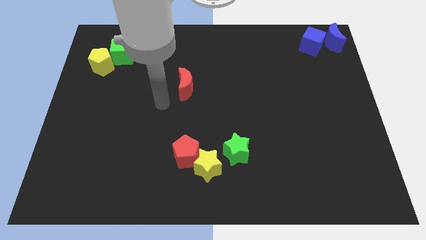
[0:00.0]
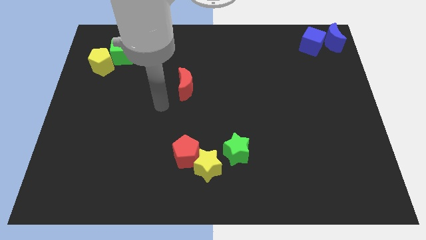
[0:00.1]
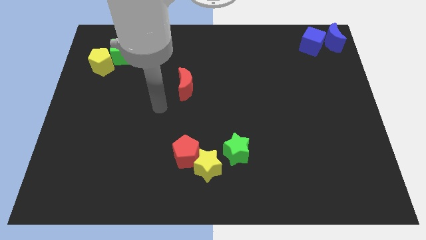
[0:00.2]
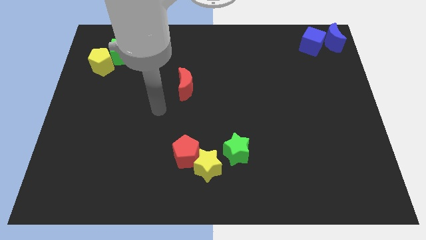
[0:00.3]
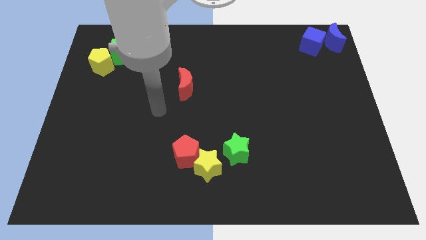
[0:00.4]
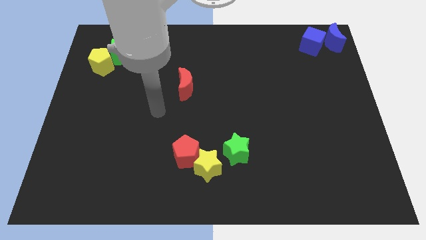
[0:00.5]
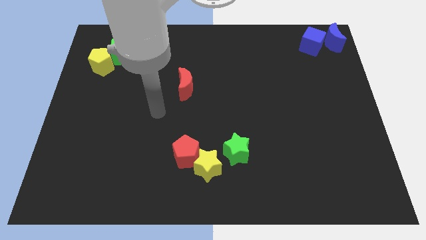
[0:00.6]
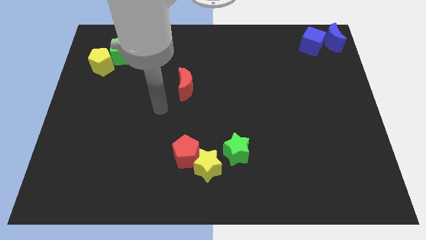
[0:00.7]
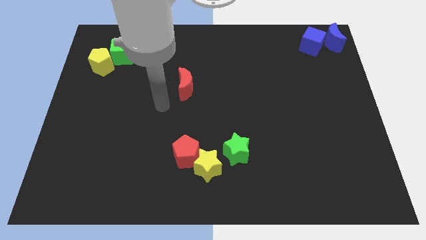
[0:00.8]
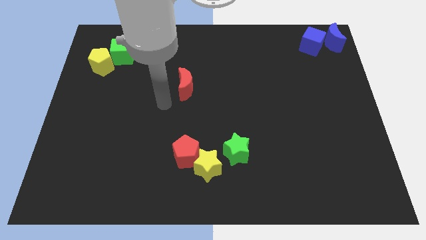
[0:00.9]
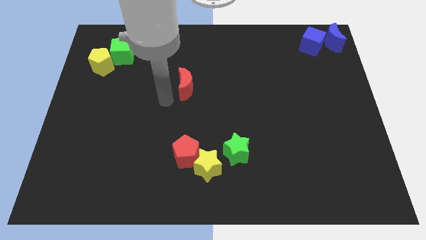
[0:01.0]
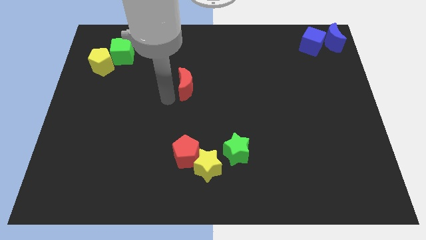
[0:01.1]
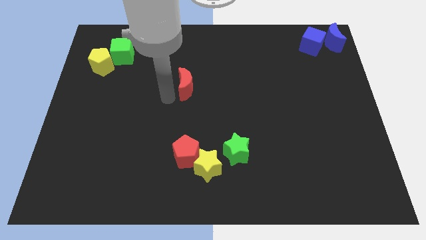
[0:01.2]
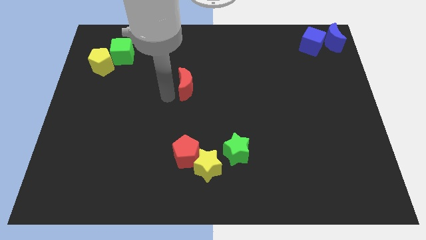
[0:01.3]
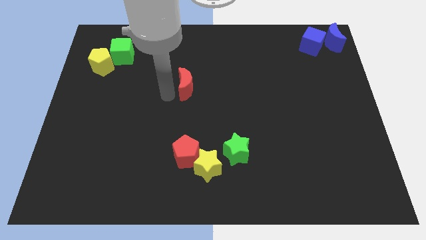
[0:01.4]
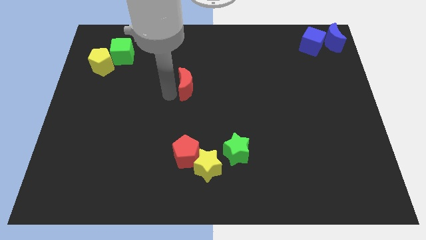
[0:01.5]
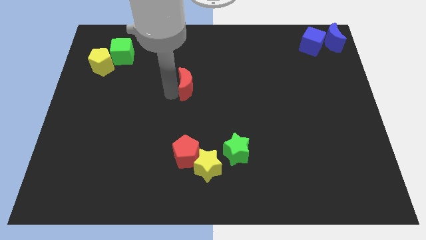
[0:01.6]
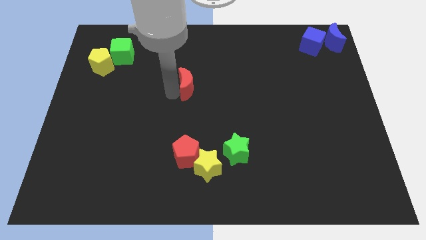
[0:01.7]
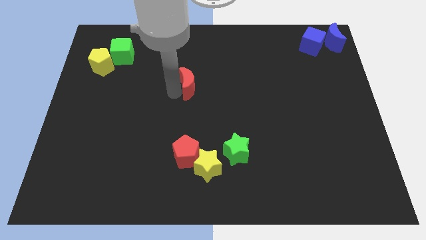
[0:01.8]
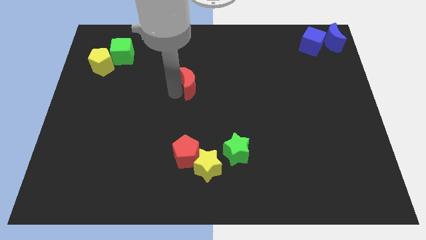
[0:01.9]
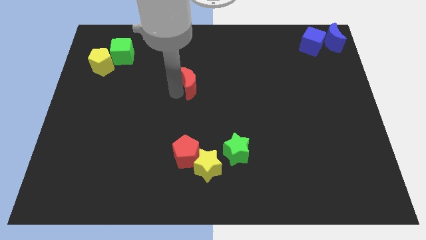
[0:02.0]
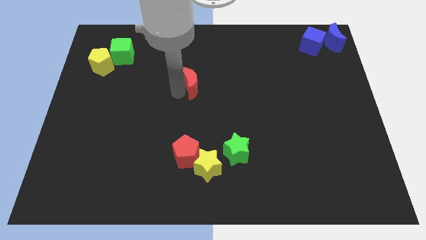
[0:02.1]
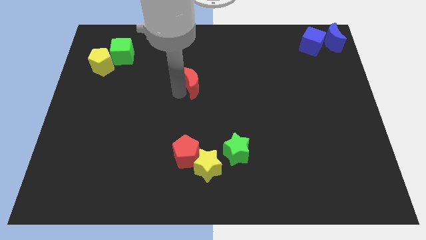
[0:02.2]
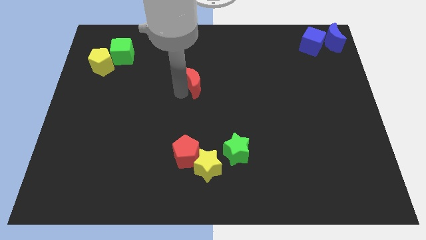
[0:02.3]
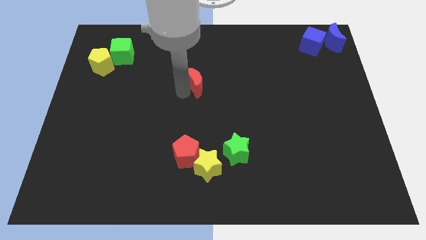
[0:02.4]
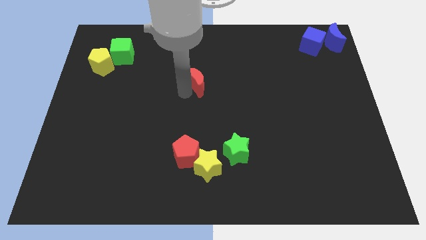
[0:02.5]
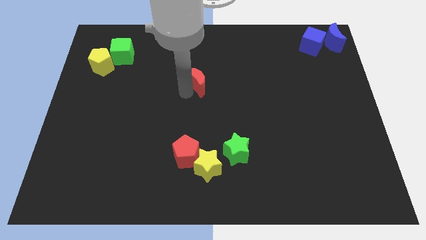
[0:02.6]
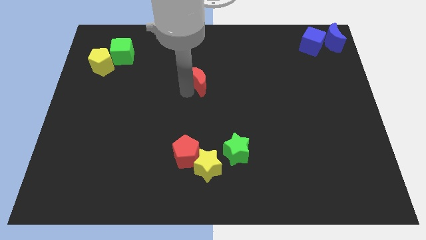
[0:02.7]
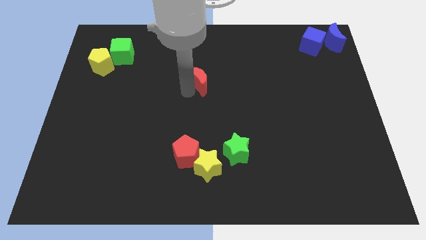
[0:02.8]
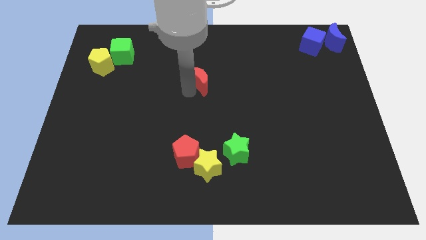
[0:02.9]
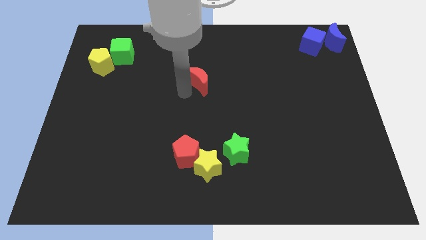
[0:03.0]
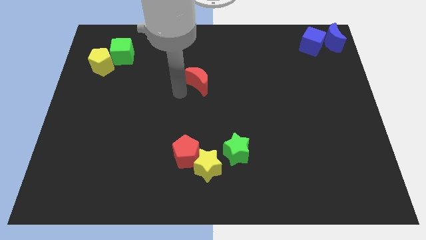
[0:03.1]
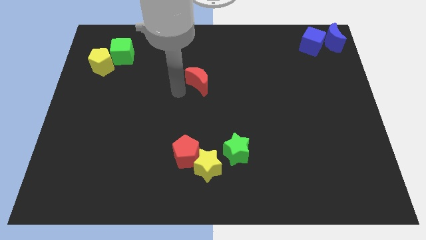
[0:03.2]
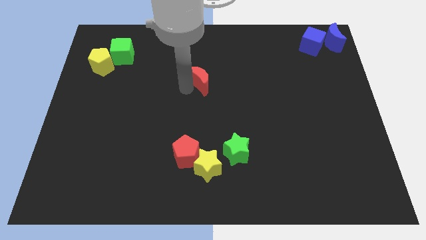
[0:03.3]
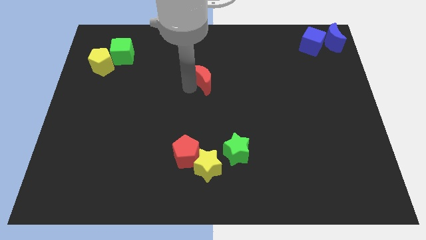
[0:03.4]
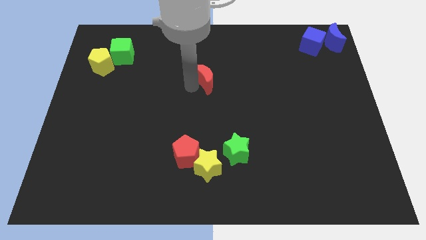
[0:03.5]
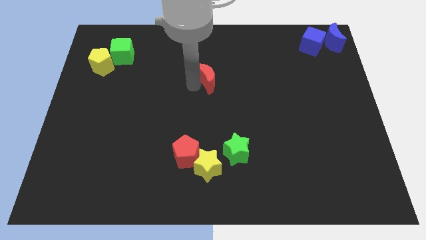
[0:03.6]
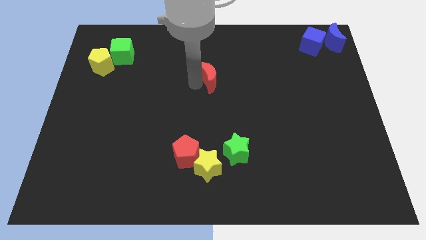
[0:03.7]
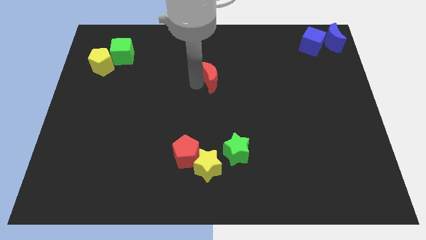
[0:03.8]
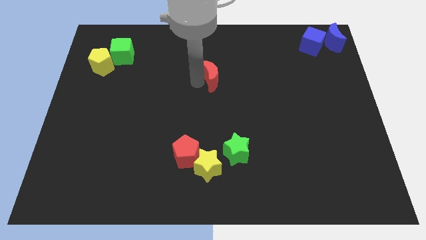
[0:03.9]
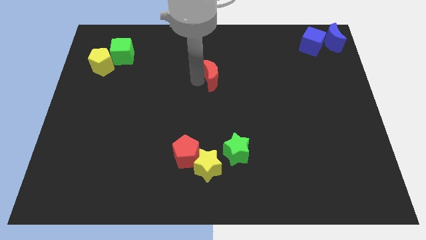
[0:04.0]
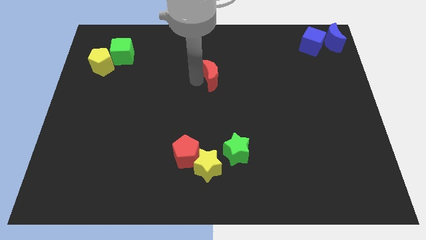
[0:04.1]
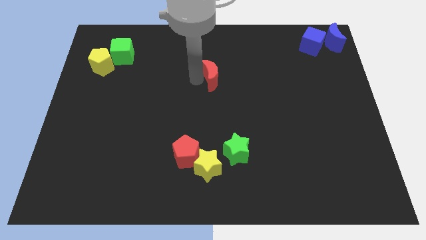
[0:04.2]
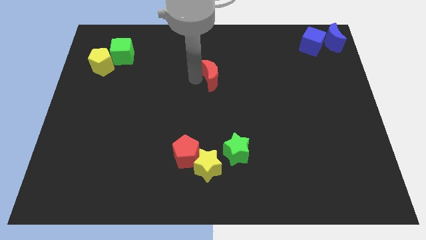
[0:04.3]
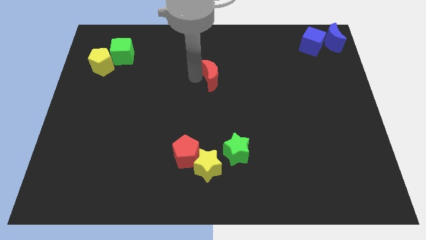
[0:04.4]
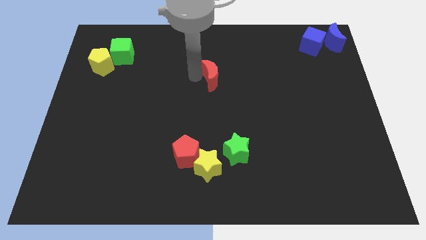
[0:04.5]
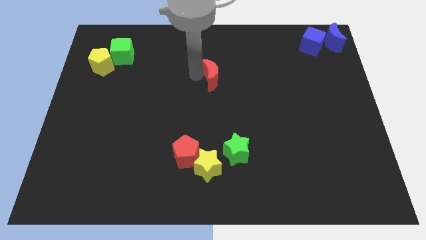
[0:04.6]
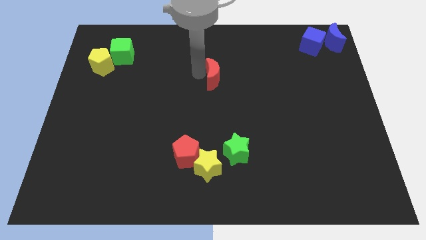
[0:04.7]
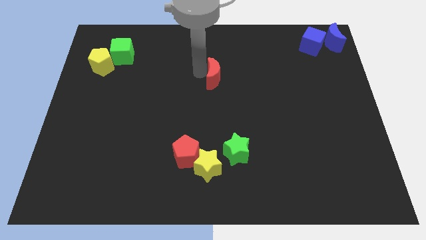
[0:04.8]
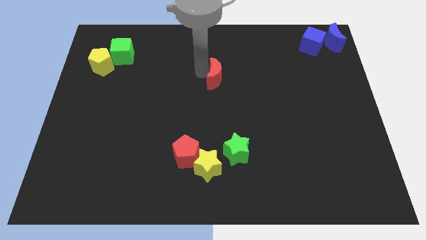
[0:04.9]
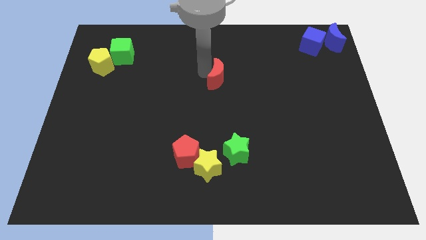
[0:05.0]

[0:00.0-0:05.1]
slide red moon above the yellow star vertically

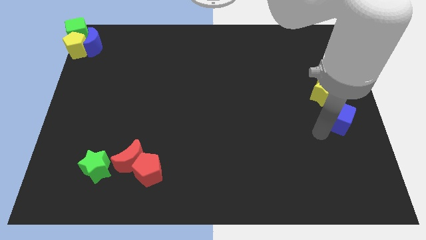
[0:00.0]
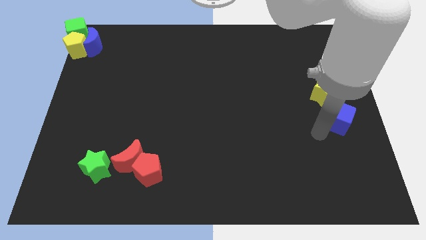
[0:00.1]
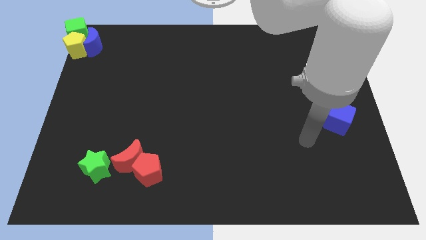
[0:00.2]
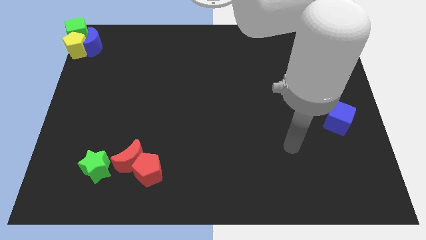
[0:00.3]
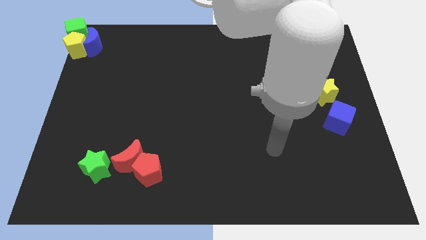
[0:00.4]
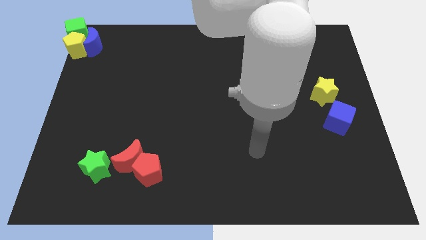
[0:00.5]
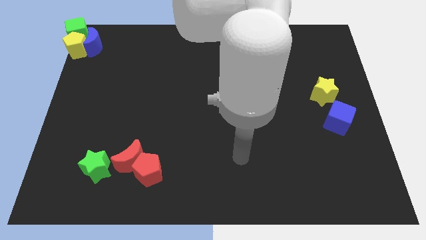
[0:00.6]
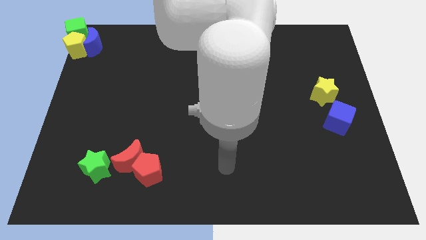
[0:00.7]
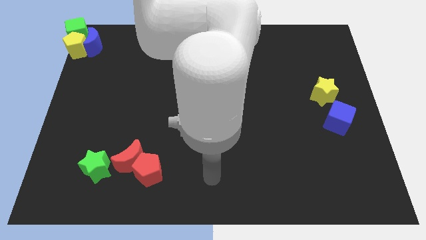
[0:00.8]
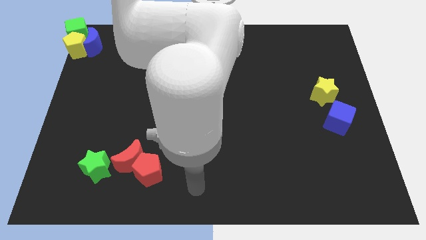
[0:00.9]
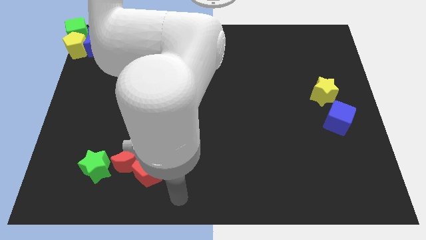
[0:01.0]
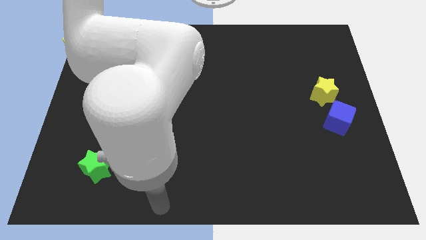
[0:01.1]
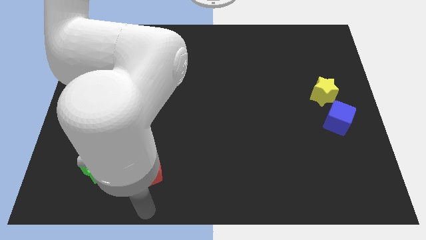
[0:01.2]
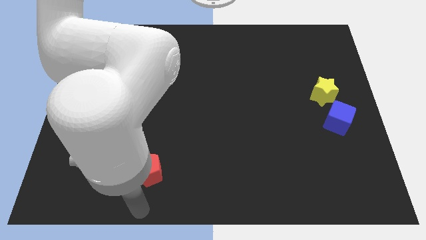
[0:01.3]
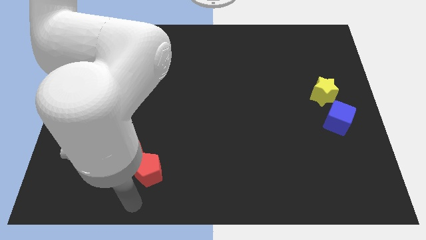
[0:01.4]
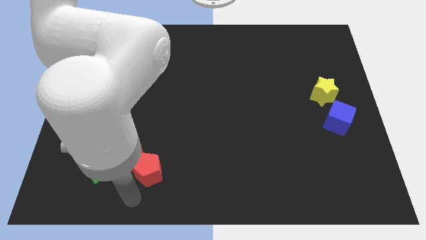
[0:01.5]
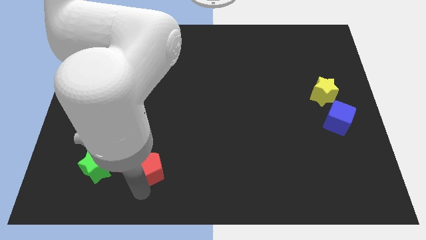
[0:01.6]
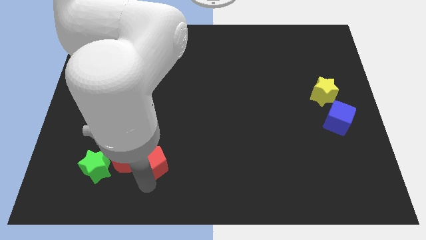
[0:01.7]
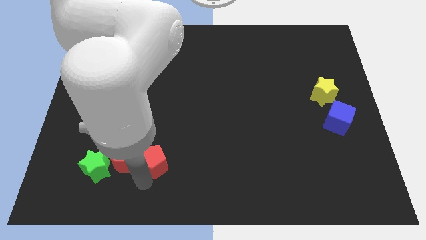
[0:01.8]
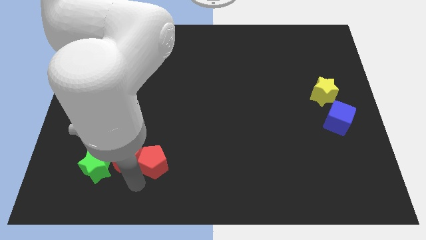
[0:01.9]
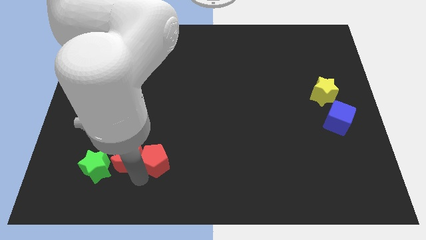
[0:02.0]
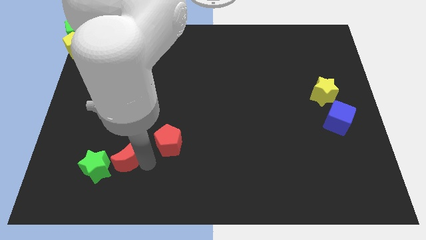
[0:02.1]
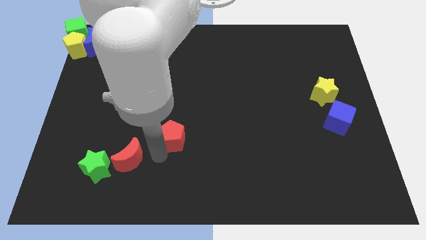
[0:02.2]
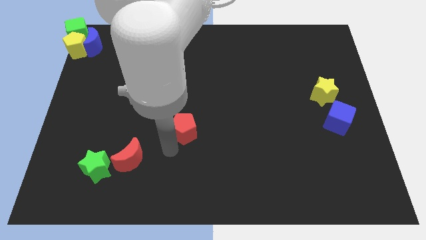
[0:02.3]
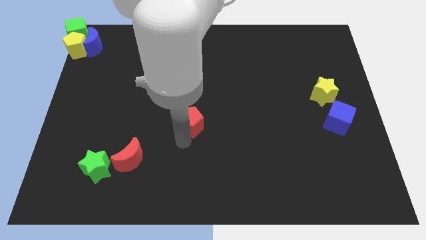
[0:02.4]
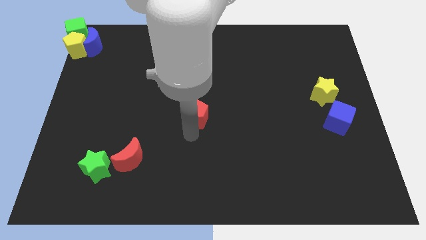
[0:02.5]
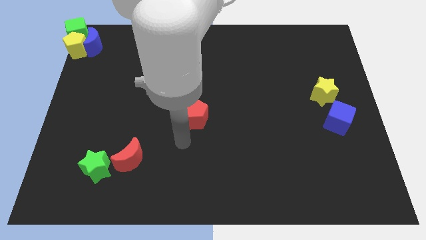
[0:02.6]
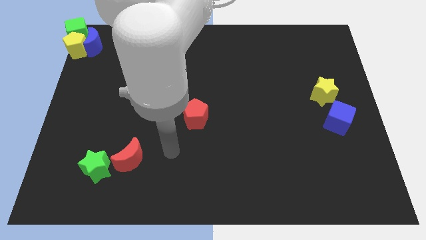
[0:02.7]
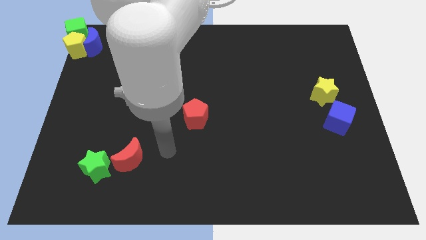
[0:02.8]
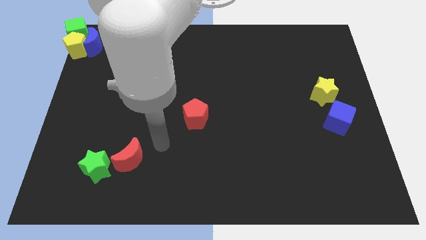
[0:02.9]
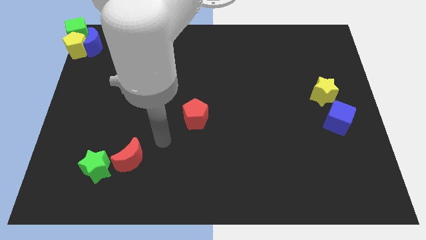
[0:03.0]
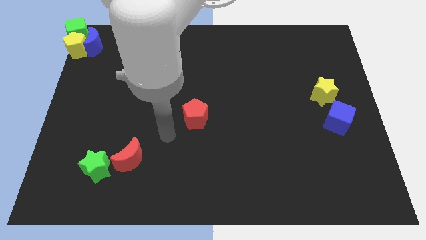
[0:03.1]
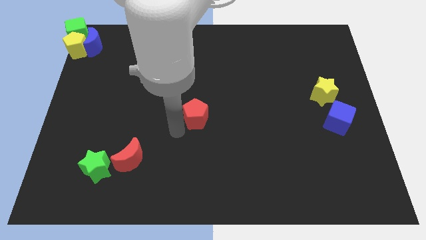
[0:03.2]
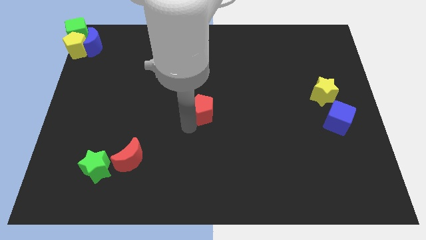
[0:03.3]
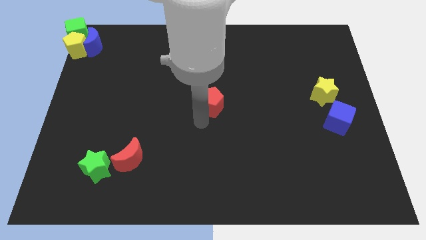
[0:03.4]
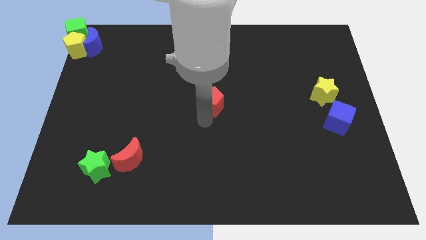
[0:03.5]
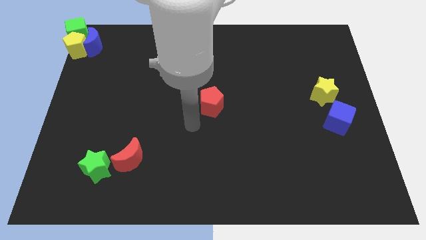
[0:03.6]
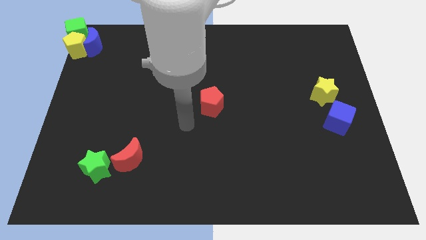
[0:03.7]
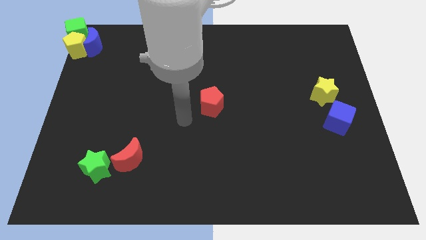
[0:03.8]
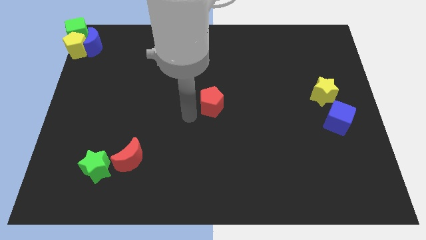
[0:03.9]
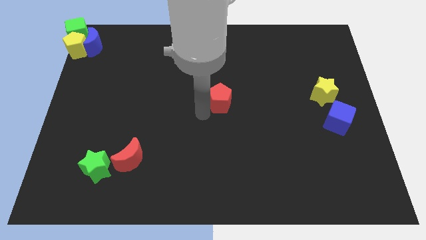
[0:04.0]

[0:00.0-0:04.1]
push the red pentagon slightly towards the top right
